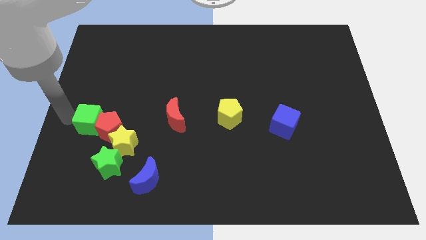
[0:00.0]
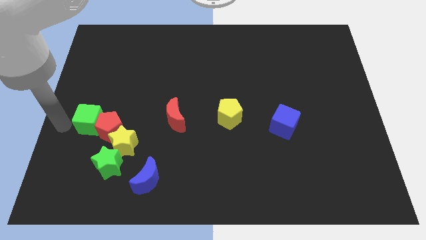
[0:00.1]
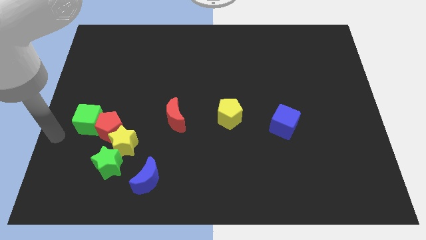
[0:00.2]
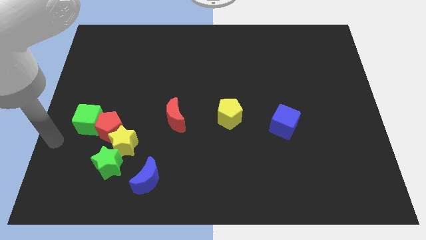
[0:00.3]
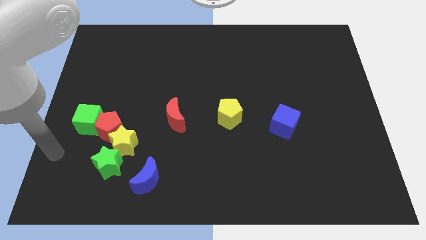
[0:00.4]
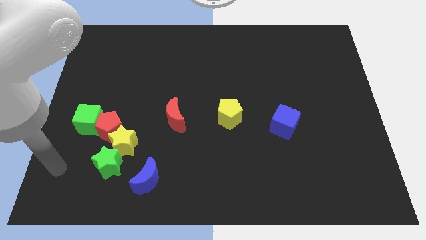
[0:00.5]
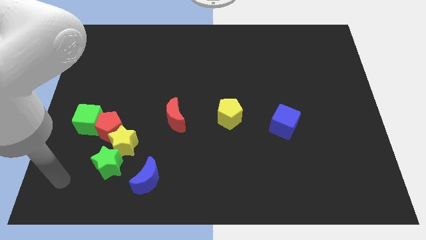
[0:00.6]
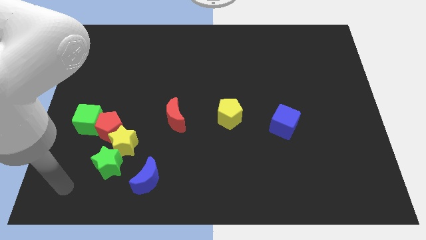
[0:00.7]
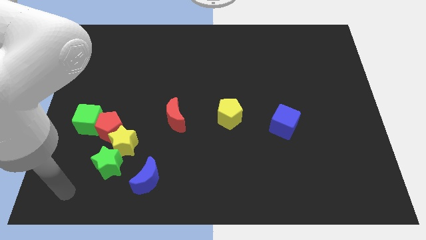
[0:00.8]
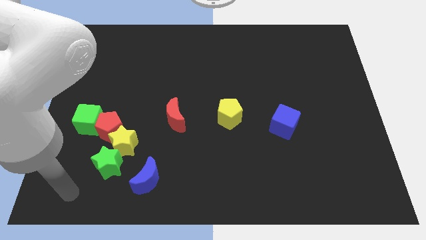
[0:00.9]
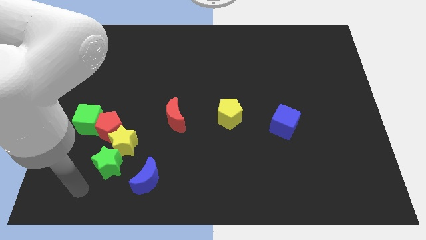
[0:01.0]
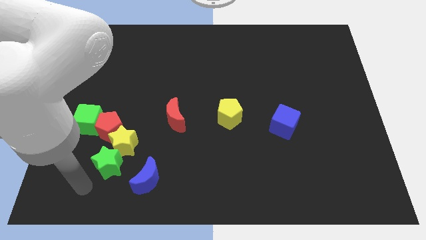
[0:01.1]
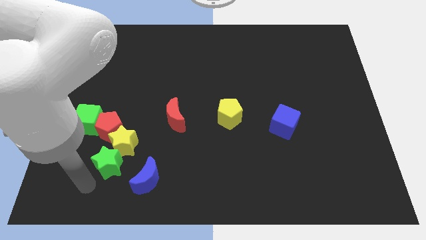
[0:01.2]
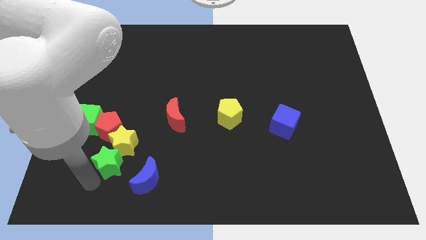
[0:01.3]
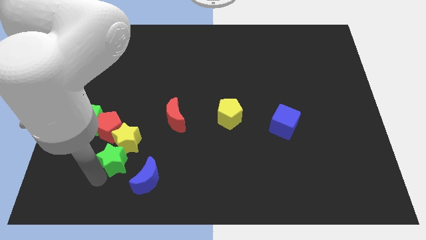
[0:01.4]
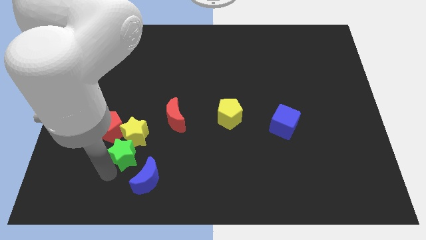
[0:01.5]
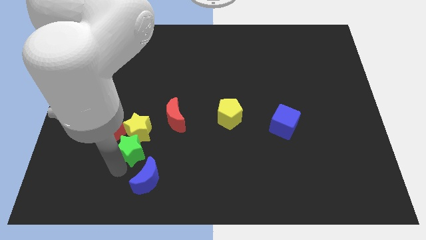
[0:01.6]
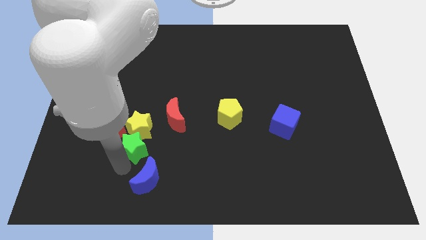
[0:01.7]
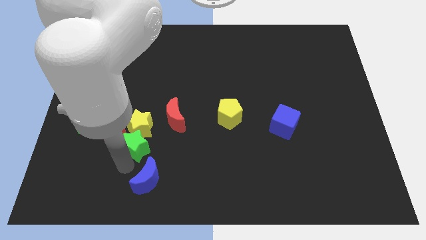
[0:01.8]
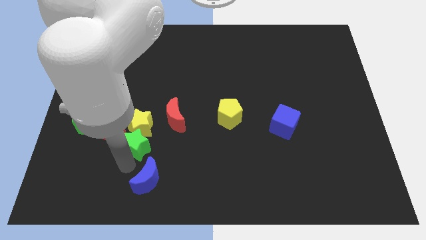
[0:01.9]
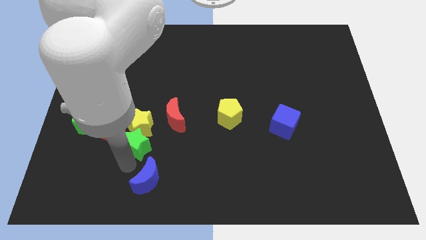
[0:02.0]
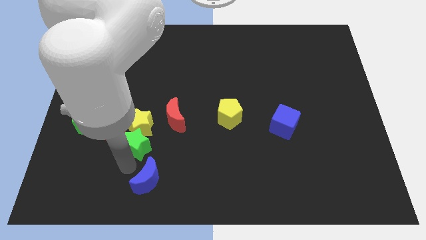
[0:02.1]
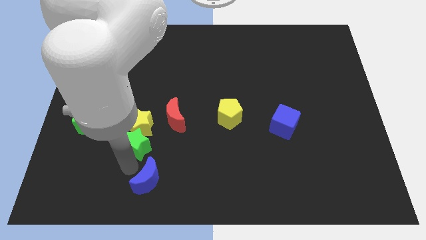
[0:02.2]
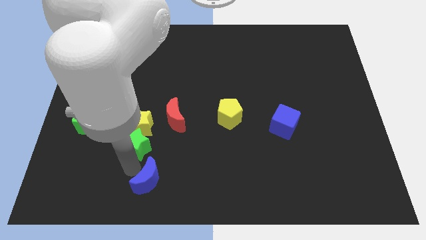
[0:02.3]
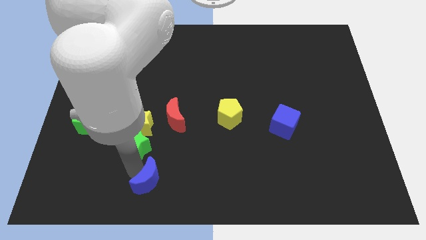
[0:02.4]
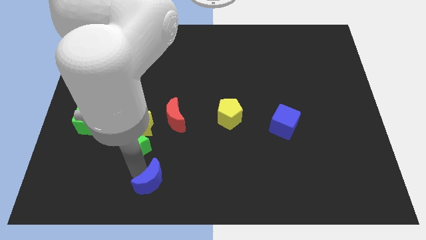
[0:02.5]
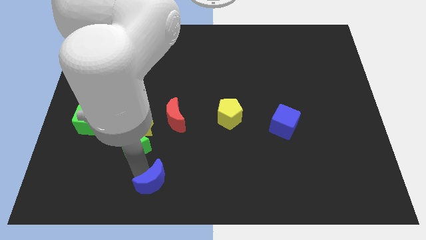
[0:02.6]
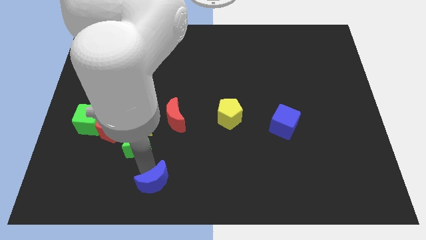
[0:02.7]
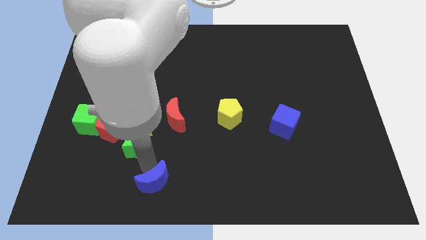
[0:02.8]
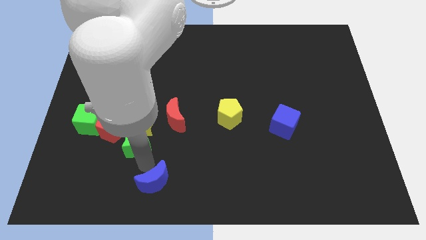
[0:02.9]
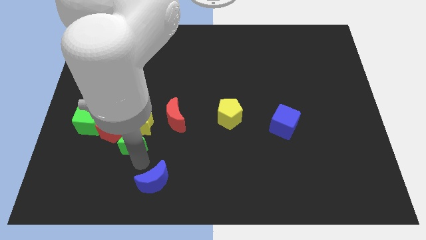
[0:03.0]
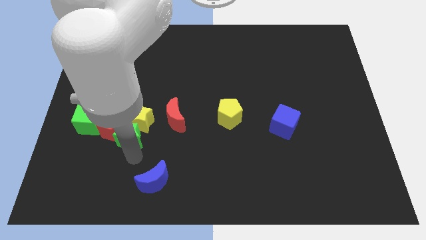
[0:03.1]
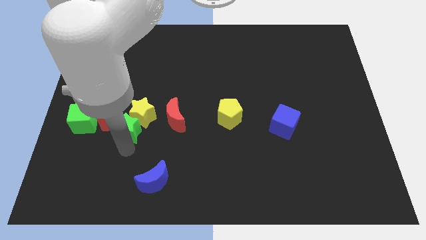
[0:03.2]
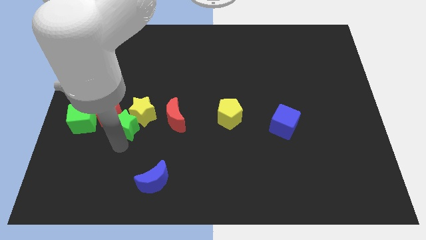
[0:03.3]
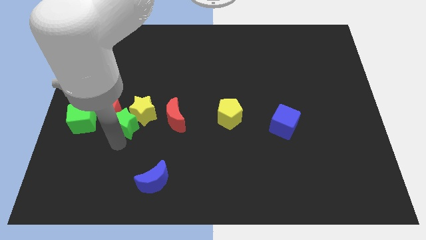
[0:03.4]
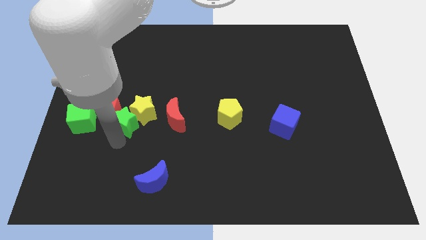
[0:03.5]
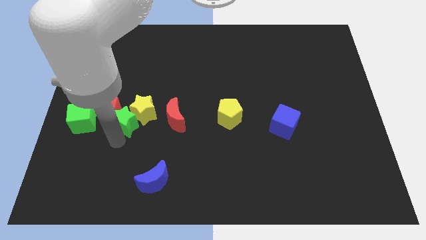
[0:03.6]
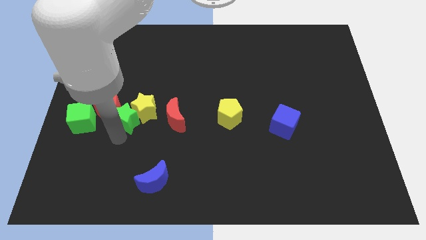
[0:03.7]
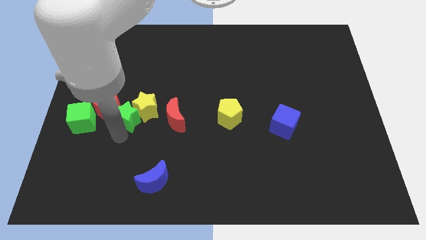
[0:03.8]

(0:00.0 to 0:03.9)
push group of blocks towards upward

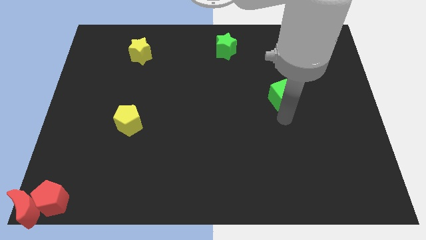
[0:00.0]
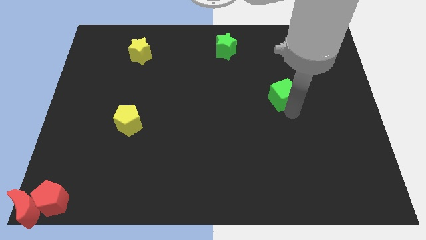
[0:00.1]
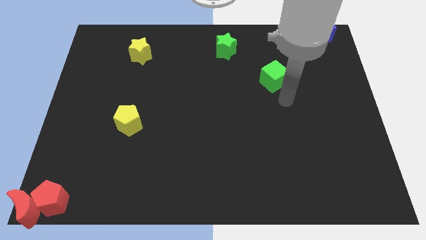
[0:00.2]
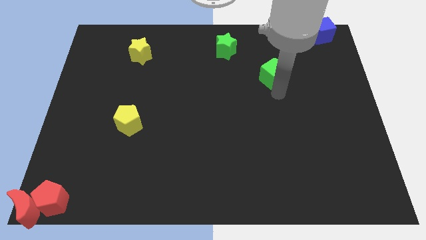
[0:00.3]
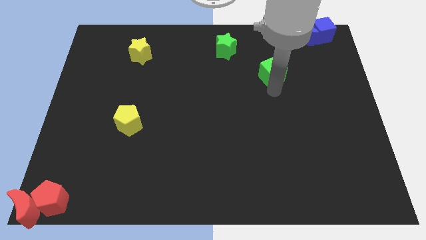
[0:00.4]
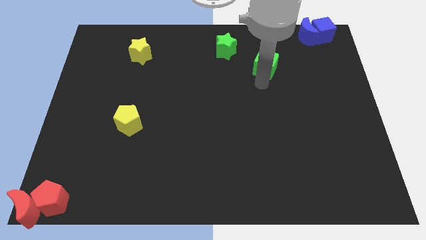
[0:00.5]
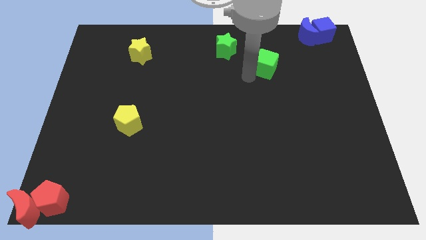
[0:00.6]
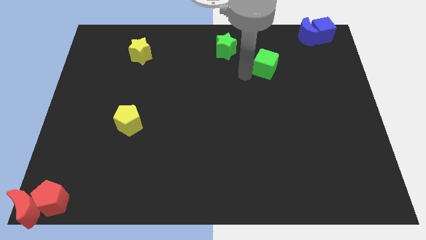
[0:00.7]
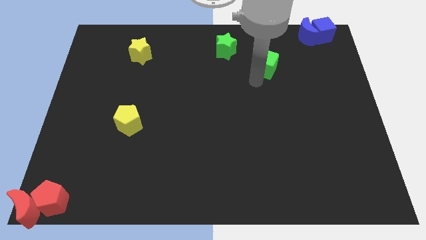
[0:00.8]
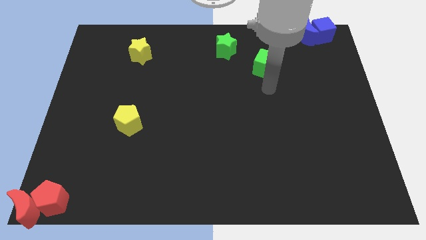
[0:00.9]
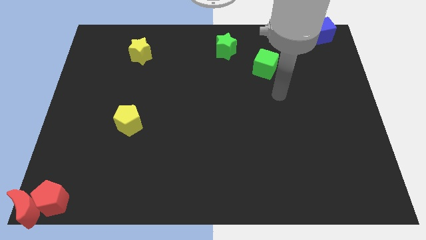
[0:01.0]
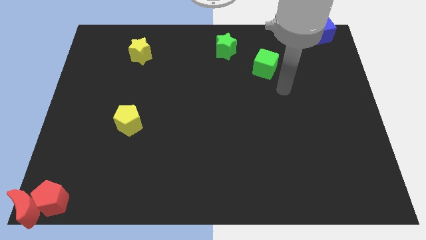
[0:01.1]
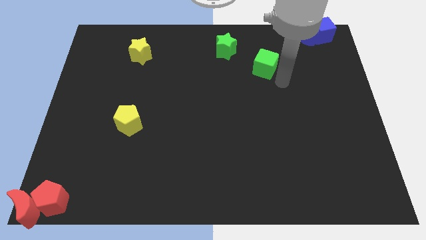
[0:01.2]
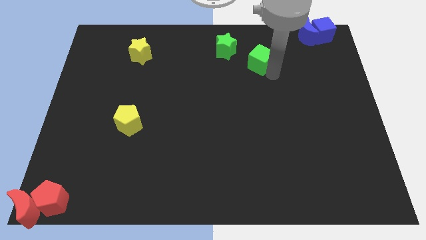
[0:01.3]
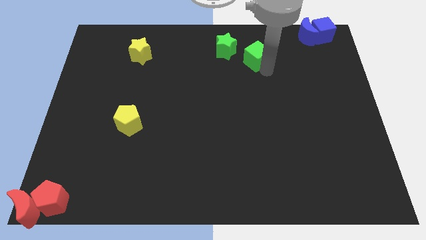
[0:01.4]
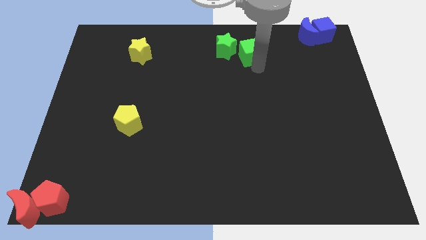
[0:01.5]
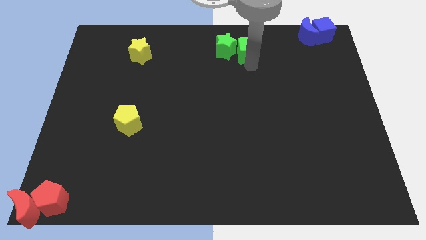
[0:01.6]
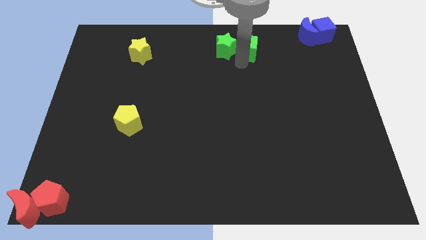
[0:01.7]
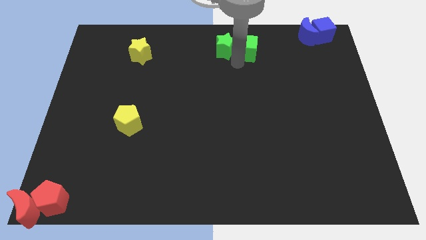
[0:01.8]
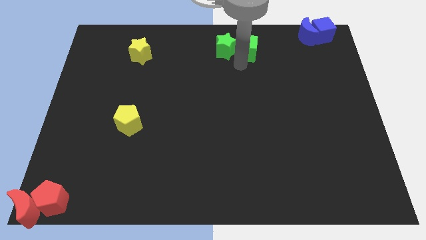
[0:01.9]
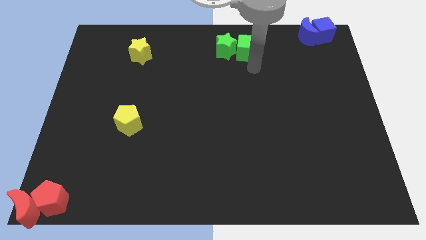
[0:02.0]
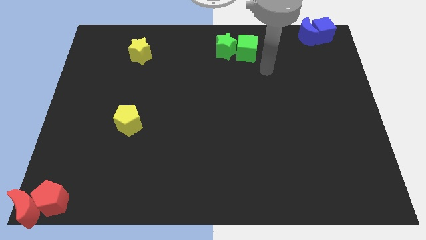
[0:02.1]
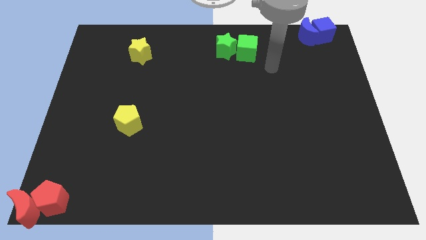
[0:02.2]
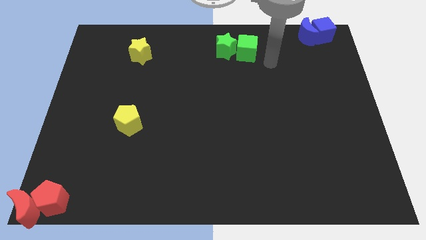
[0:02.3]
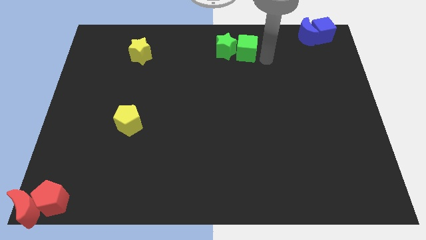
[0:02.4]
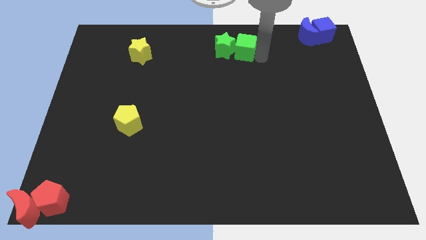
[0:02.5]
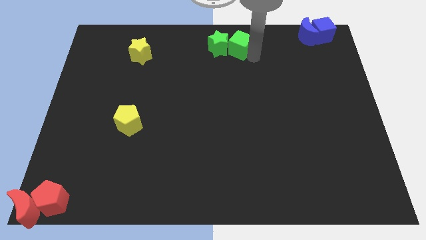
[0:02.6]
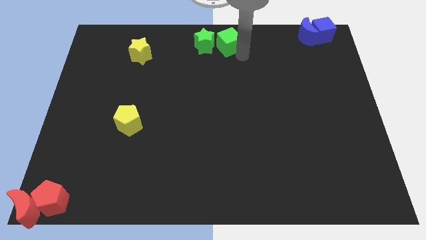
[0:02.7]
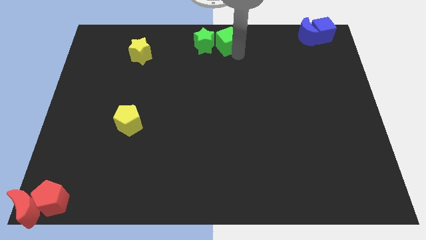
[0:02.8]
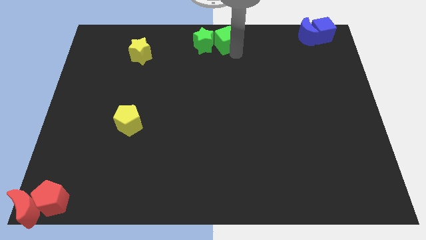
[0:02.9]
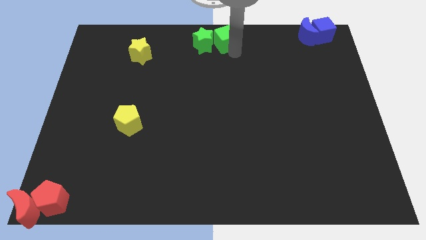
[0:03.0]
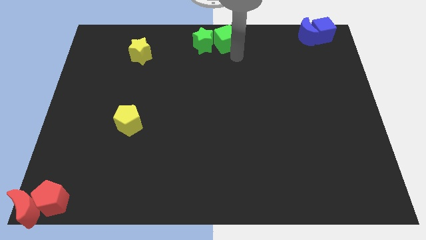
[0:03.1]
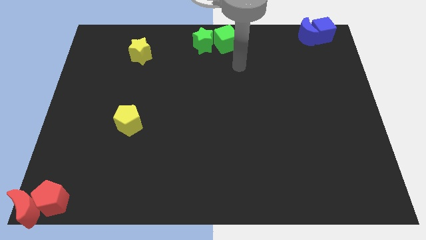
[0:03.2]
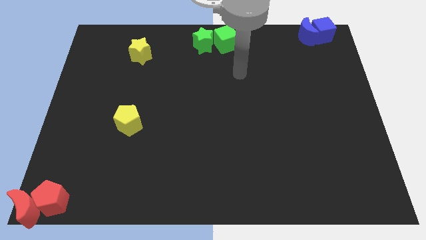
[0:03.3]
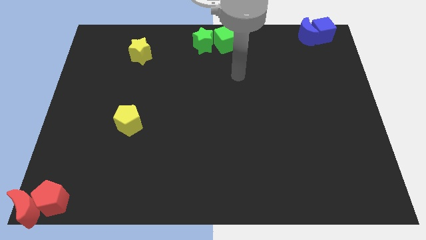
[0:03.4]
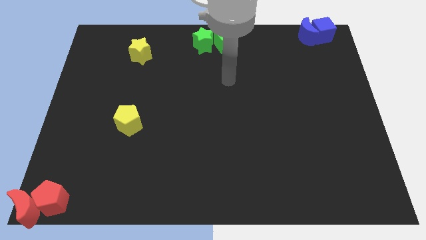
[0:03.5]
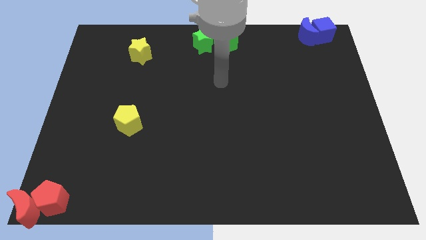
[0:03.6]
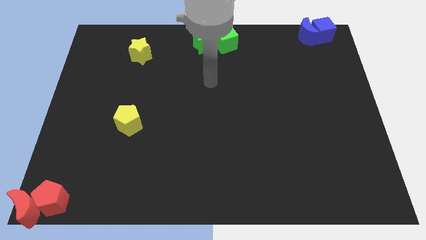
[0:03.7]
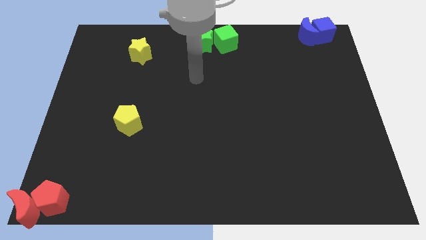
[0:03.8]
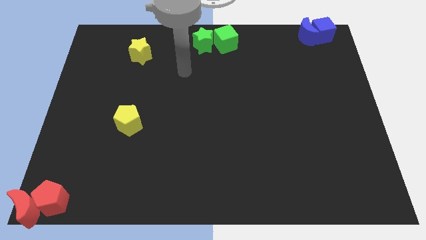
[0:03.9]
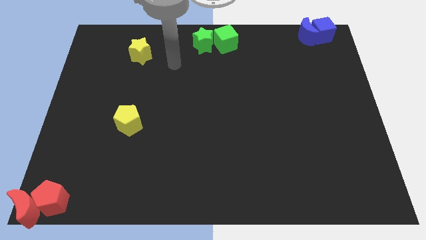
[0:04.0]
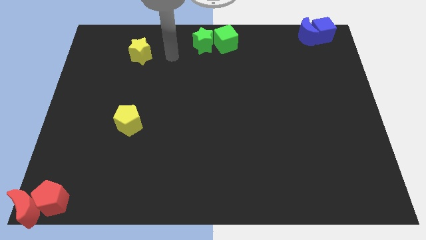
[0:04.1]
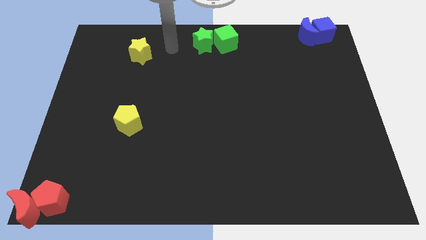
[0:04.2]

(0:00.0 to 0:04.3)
move the green cube into the green star

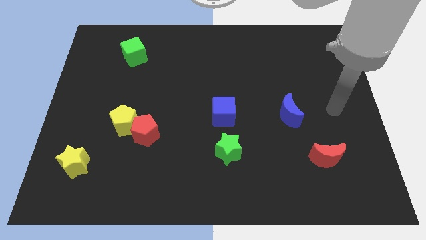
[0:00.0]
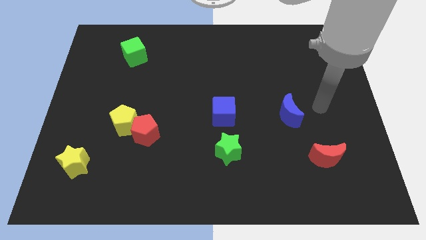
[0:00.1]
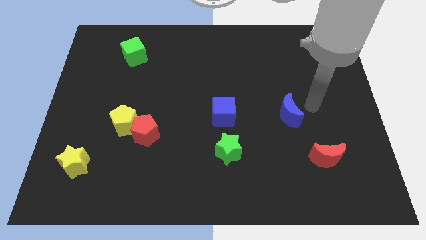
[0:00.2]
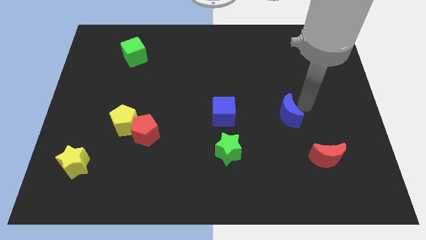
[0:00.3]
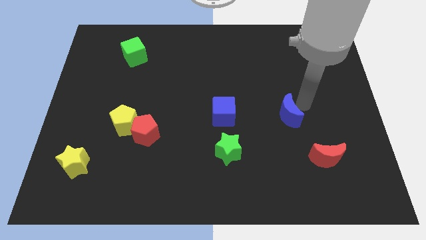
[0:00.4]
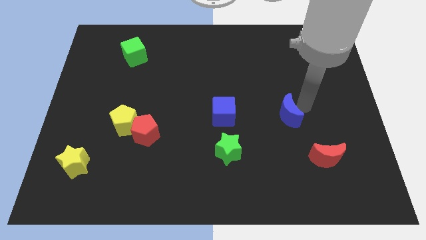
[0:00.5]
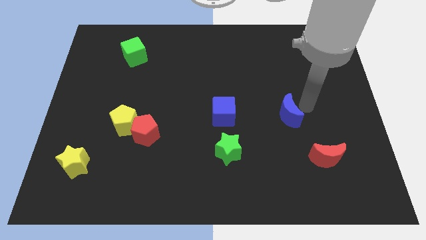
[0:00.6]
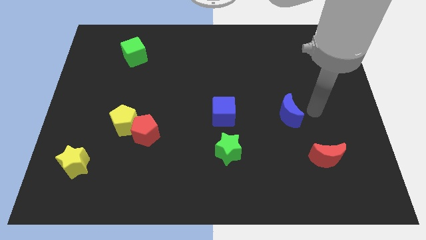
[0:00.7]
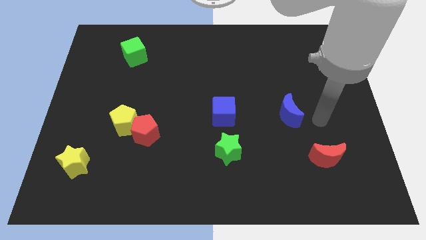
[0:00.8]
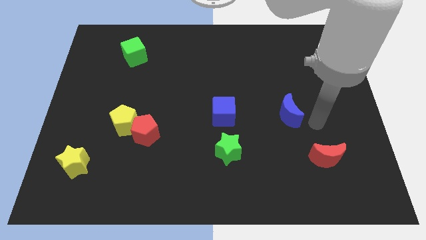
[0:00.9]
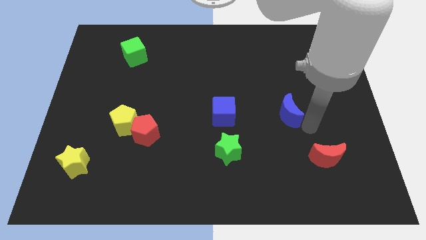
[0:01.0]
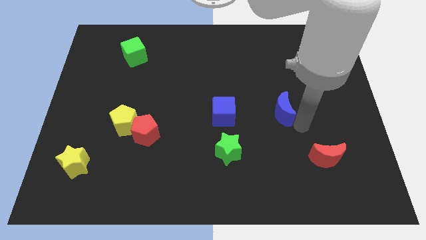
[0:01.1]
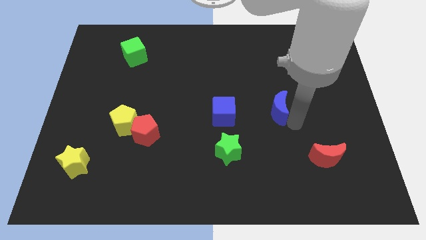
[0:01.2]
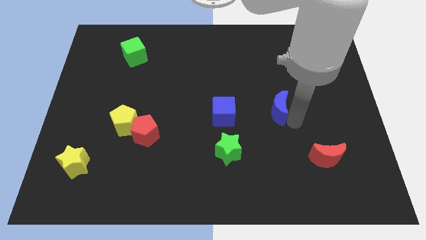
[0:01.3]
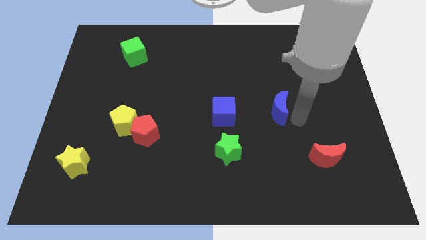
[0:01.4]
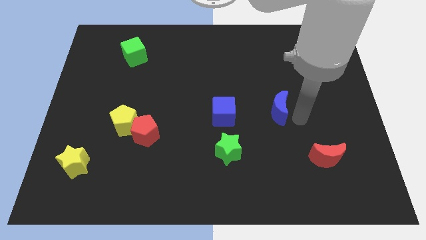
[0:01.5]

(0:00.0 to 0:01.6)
push the blue crescent slightly to the left
